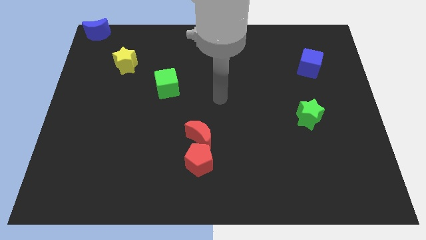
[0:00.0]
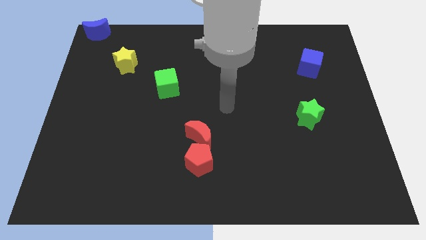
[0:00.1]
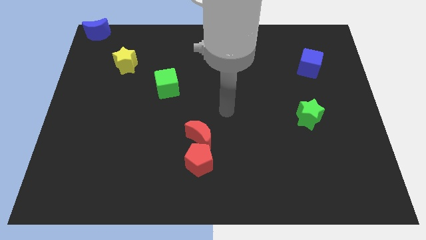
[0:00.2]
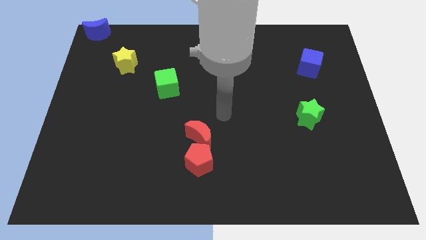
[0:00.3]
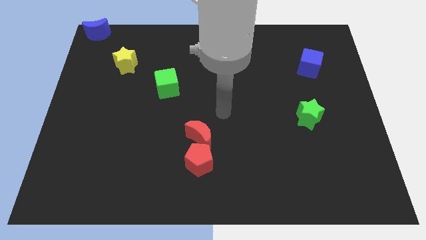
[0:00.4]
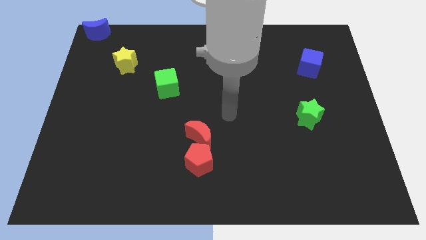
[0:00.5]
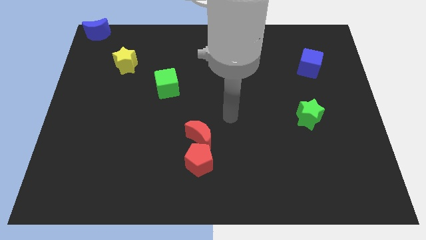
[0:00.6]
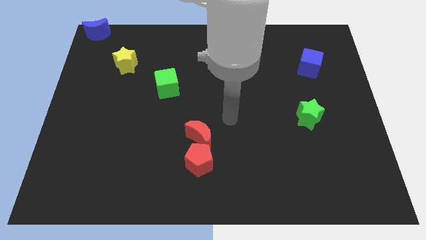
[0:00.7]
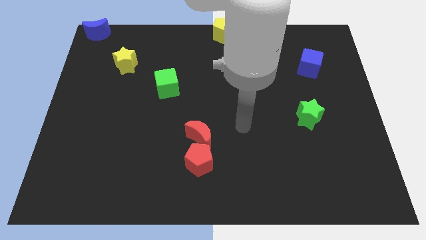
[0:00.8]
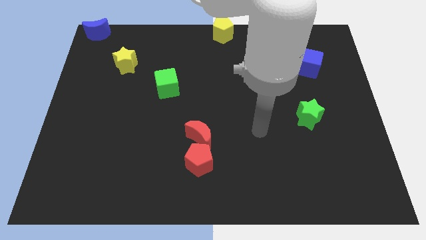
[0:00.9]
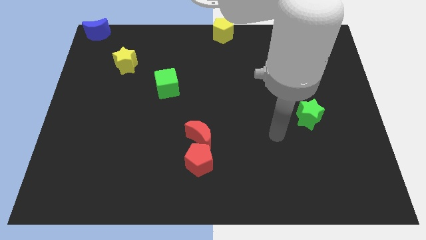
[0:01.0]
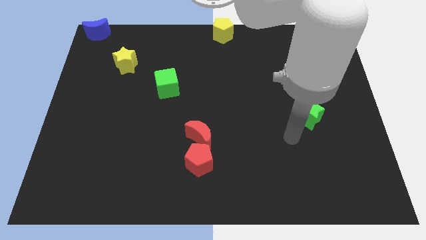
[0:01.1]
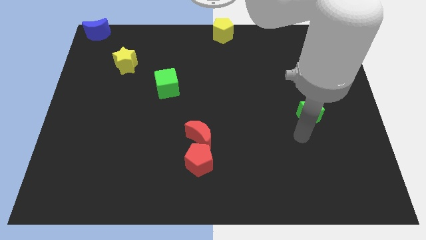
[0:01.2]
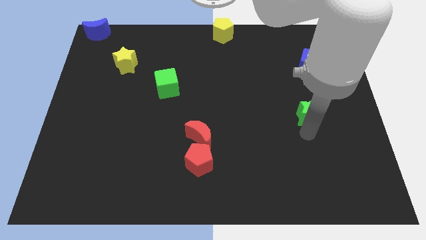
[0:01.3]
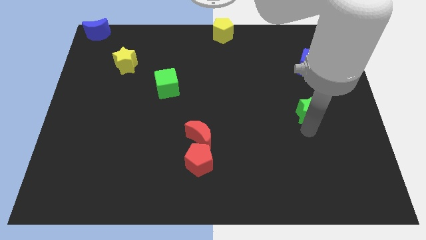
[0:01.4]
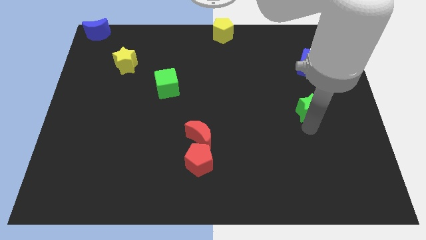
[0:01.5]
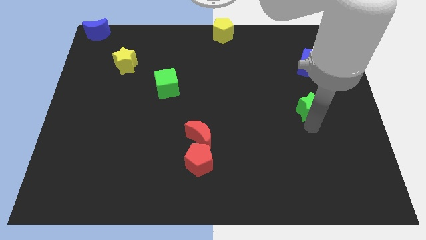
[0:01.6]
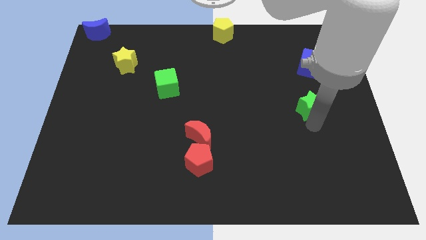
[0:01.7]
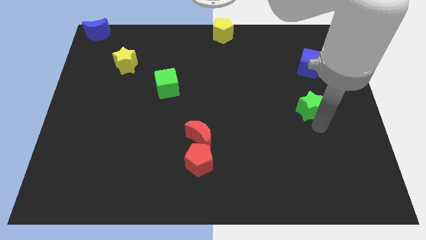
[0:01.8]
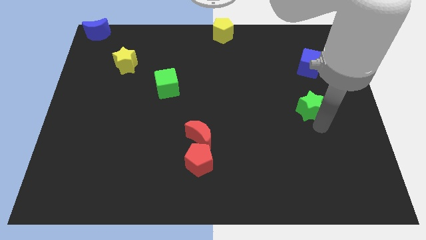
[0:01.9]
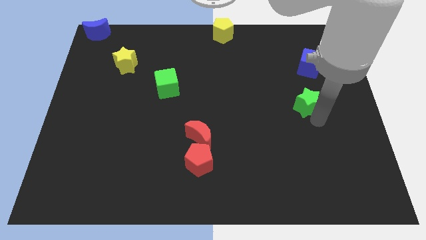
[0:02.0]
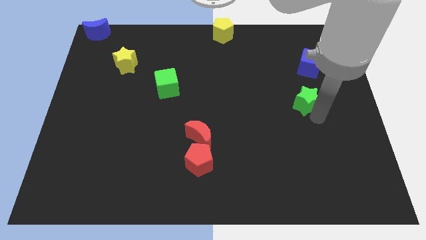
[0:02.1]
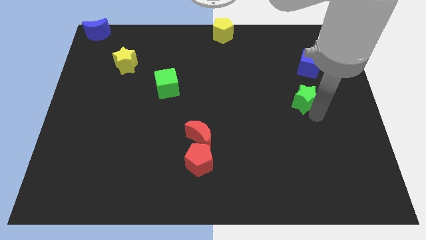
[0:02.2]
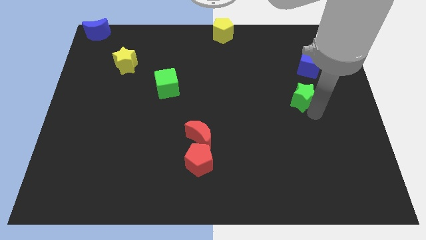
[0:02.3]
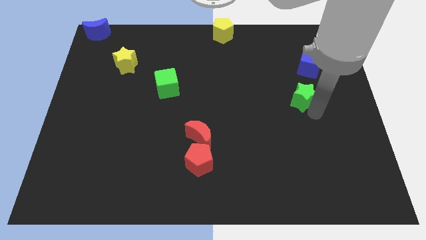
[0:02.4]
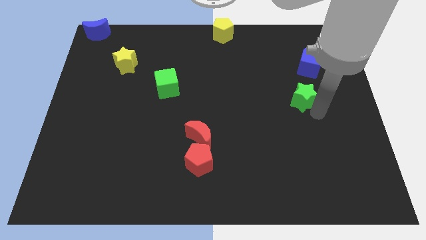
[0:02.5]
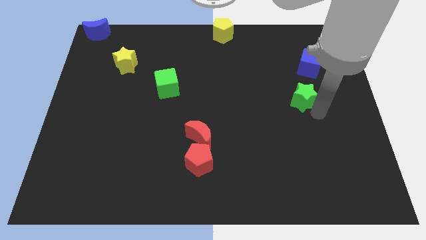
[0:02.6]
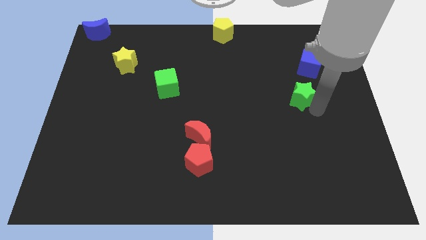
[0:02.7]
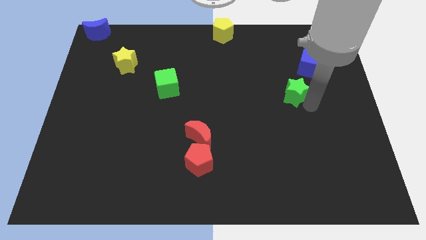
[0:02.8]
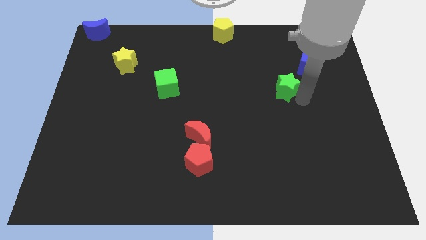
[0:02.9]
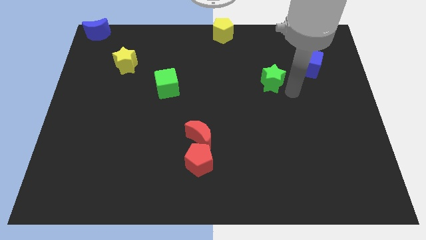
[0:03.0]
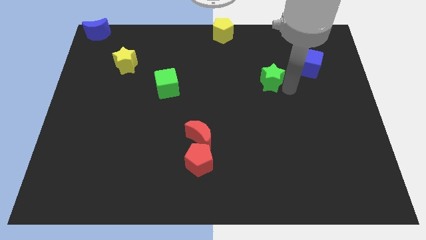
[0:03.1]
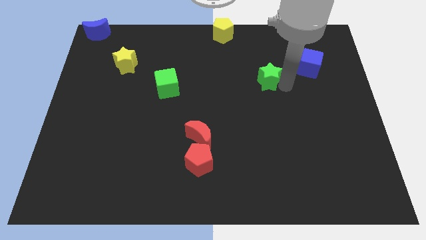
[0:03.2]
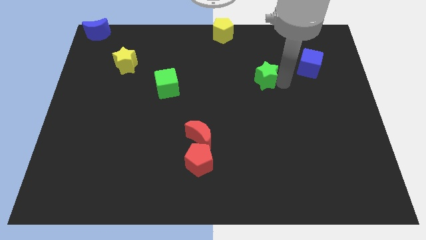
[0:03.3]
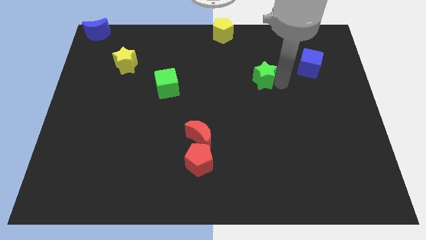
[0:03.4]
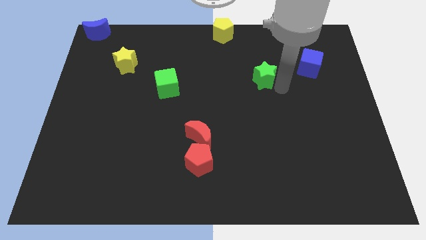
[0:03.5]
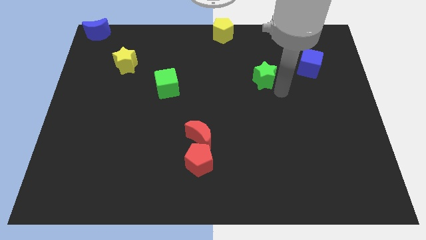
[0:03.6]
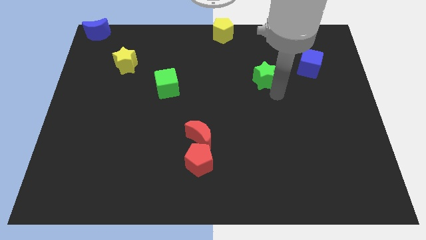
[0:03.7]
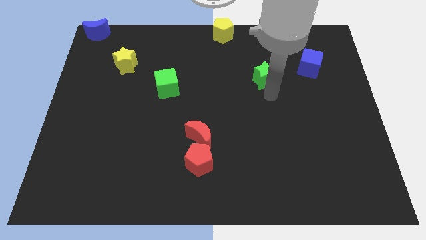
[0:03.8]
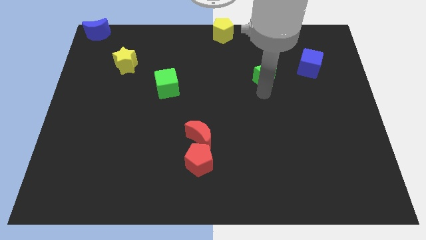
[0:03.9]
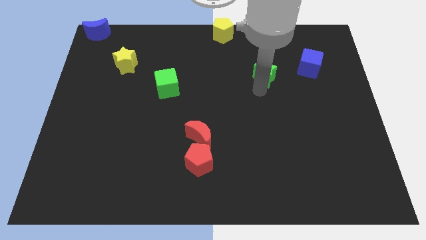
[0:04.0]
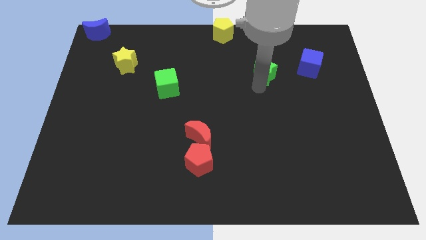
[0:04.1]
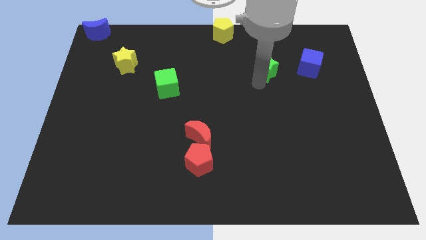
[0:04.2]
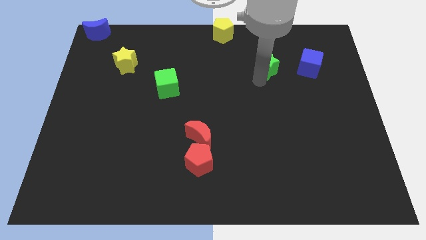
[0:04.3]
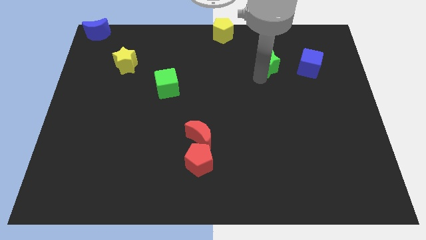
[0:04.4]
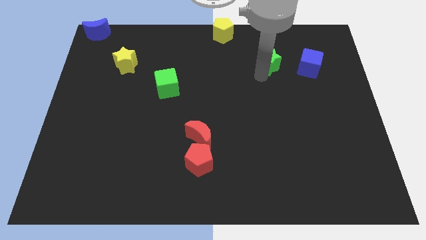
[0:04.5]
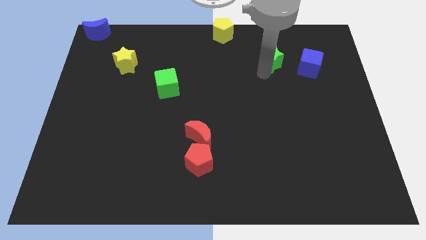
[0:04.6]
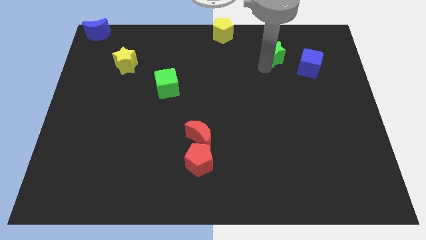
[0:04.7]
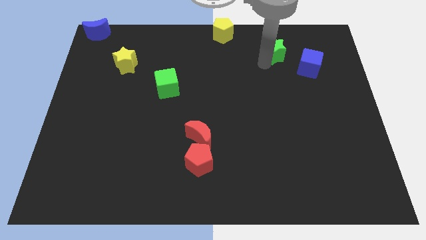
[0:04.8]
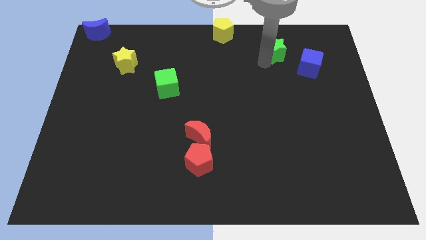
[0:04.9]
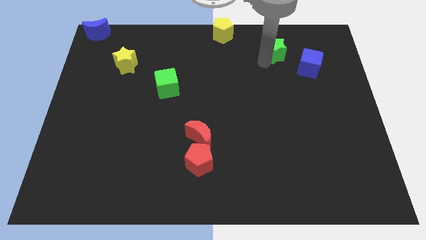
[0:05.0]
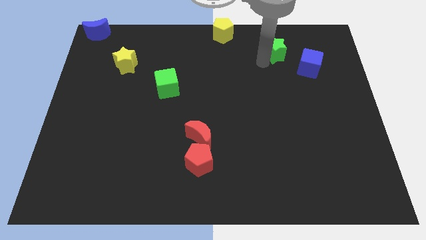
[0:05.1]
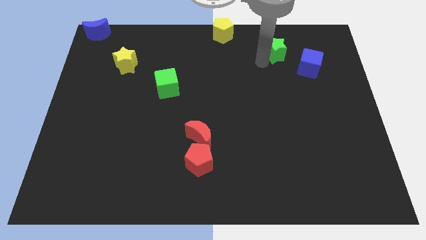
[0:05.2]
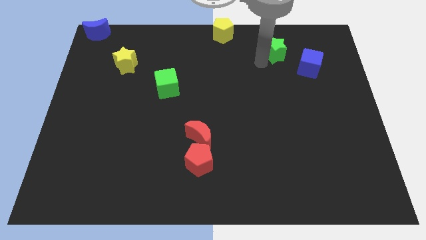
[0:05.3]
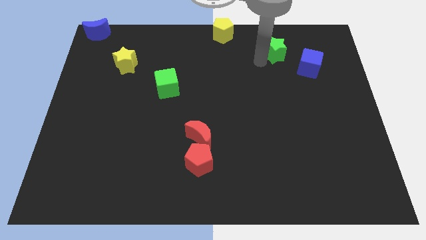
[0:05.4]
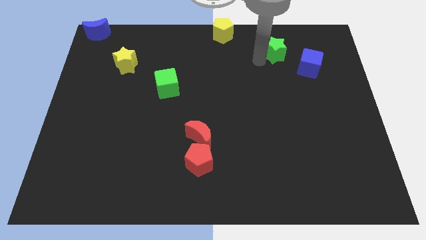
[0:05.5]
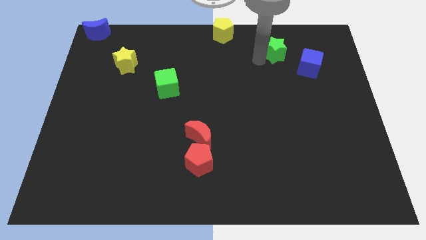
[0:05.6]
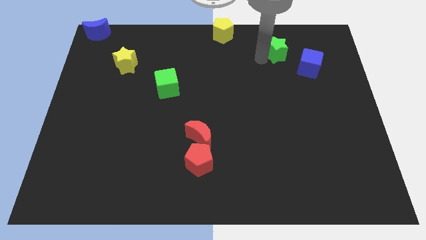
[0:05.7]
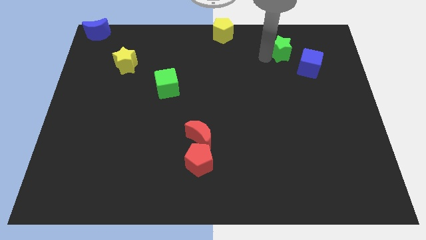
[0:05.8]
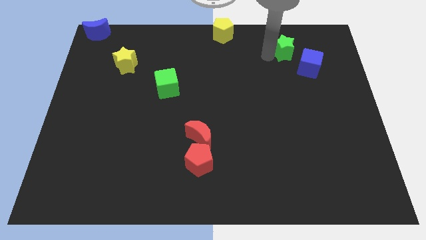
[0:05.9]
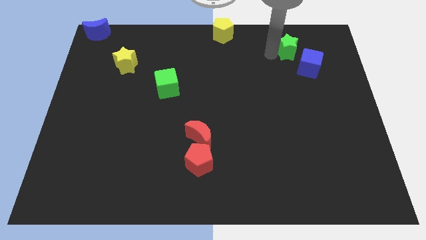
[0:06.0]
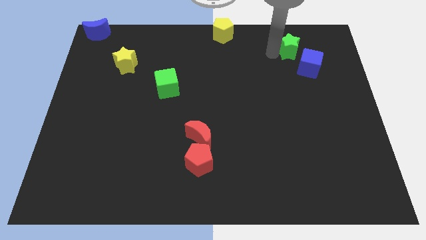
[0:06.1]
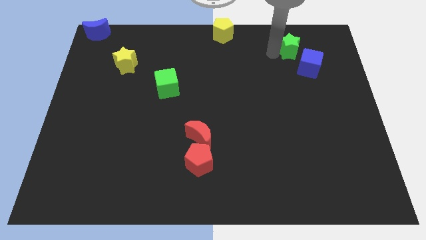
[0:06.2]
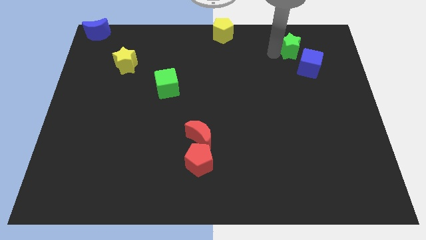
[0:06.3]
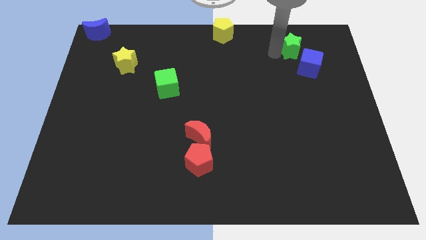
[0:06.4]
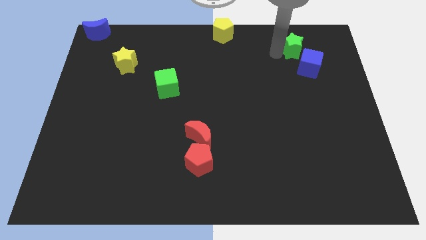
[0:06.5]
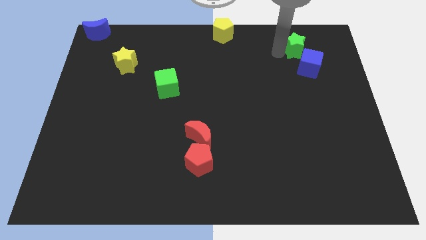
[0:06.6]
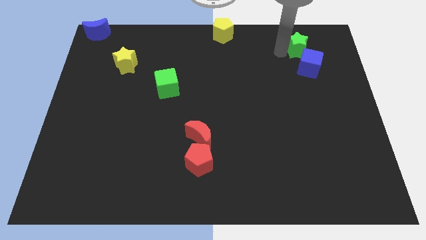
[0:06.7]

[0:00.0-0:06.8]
push the green star towards the top right

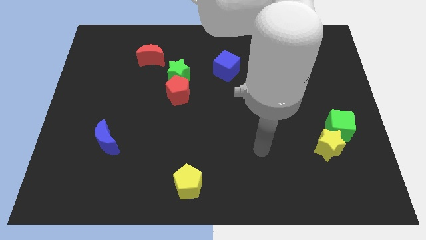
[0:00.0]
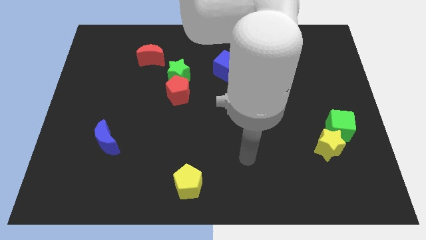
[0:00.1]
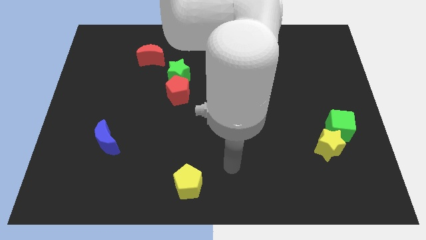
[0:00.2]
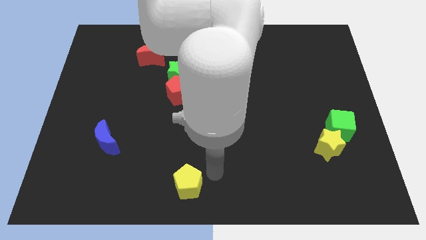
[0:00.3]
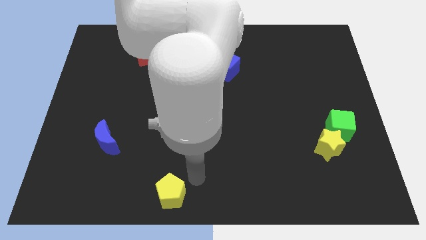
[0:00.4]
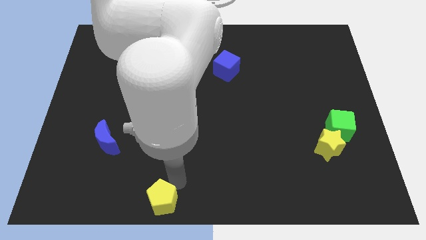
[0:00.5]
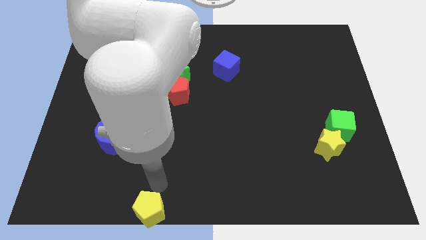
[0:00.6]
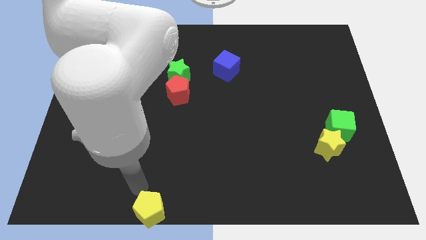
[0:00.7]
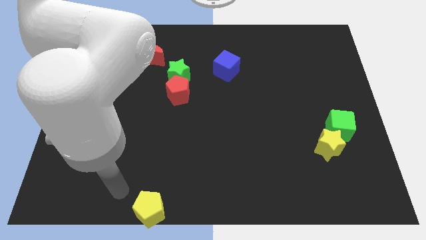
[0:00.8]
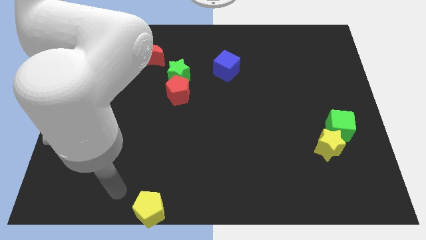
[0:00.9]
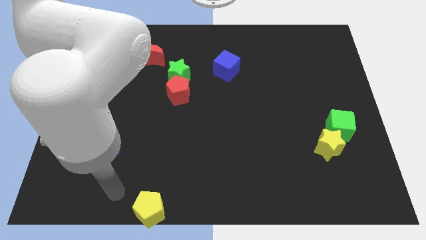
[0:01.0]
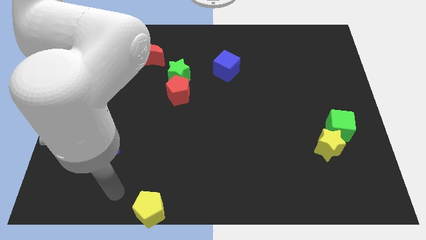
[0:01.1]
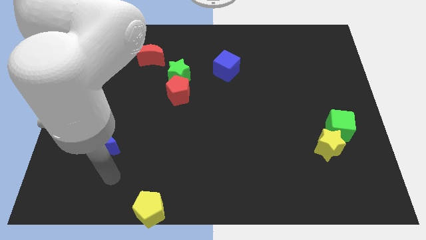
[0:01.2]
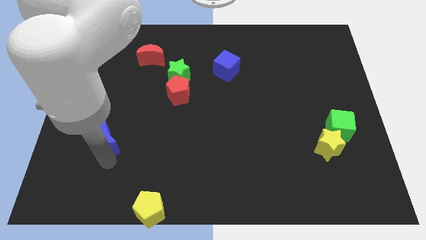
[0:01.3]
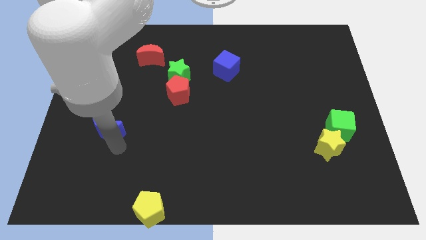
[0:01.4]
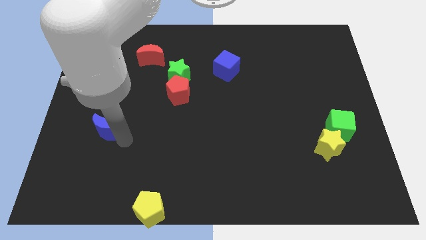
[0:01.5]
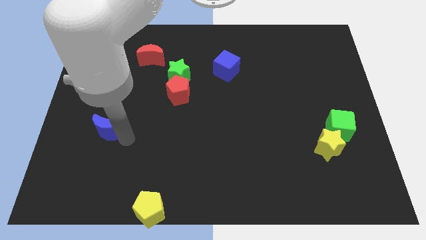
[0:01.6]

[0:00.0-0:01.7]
push the yellow pentagon to the bottom middle of the board

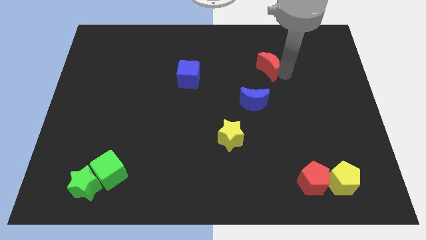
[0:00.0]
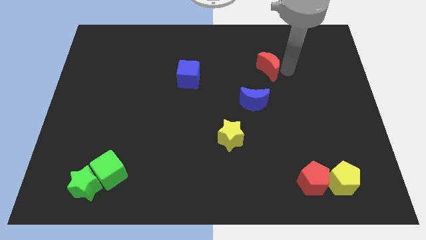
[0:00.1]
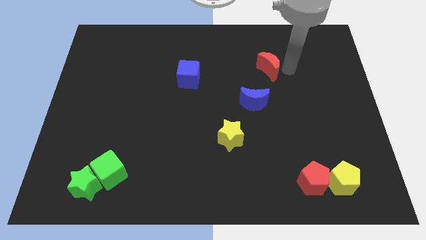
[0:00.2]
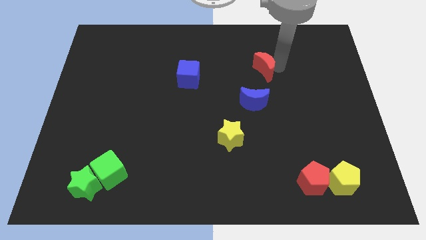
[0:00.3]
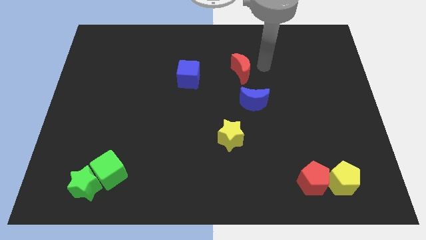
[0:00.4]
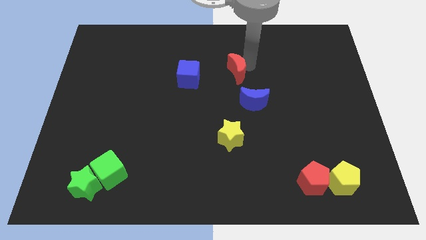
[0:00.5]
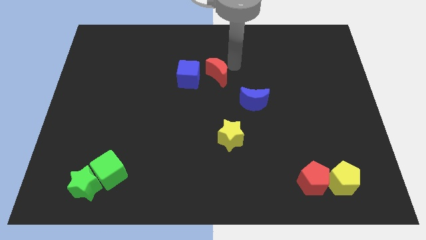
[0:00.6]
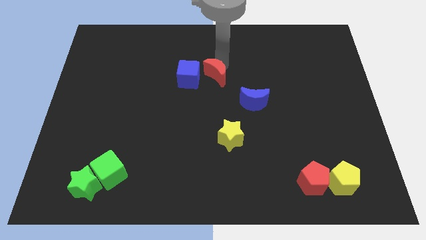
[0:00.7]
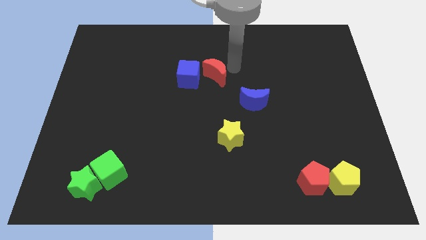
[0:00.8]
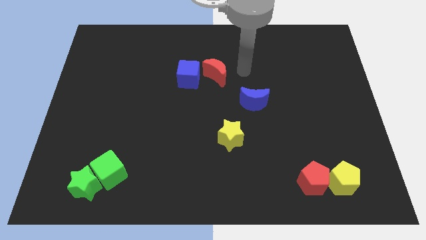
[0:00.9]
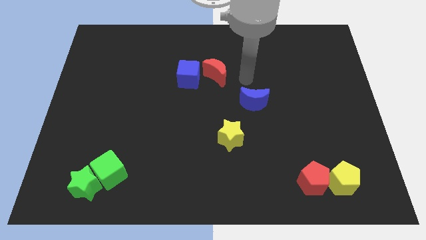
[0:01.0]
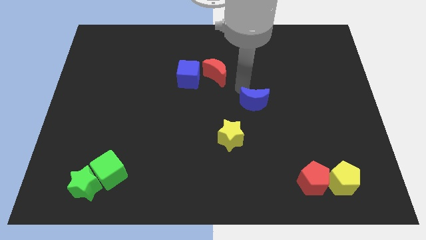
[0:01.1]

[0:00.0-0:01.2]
place the red crescent close to the blue cube
